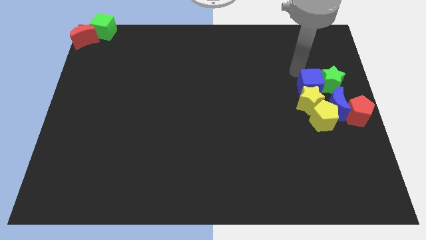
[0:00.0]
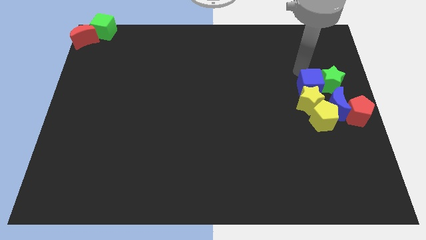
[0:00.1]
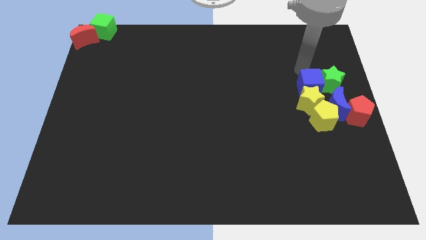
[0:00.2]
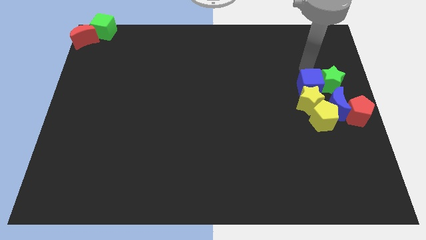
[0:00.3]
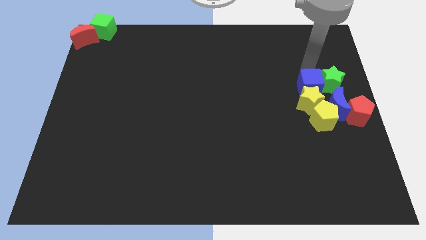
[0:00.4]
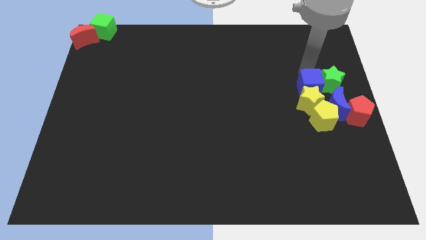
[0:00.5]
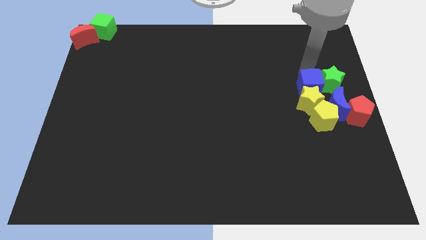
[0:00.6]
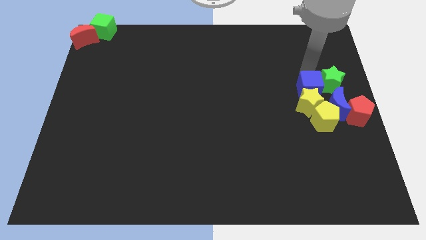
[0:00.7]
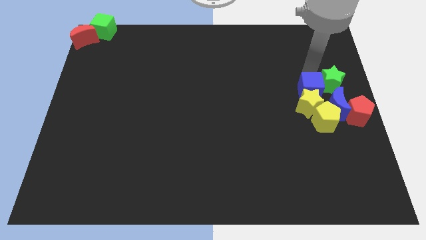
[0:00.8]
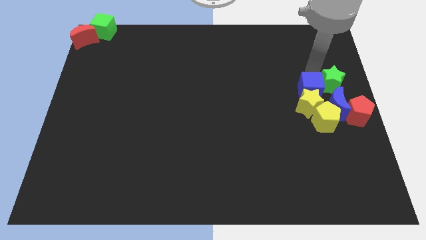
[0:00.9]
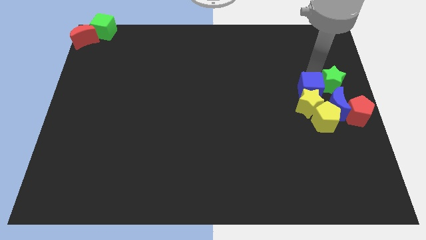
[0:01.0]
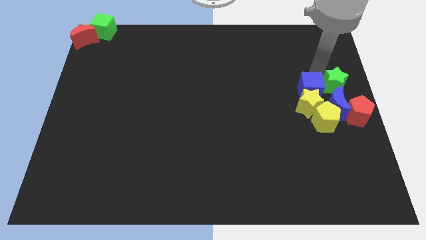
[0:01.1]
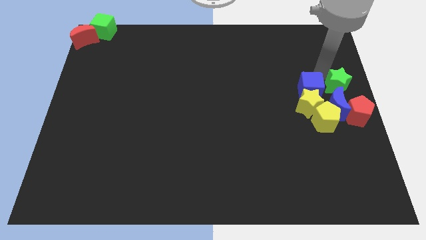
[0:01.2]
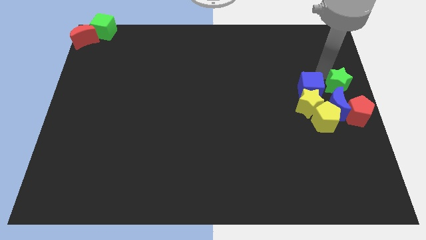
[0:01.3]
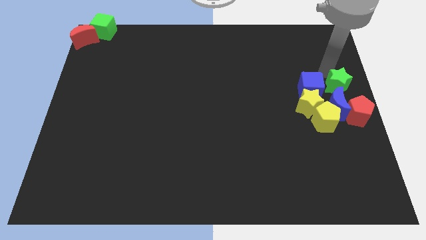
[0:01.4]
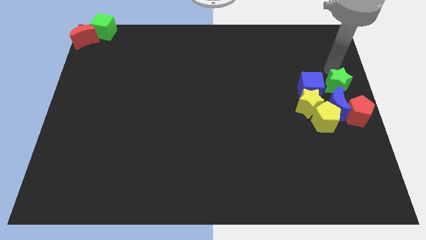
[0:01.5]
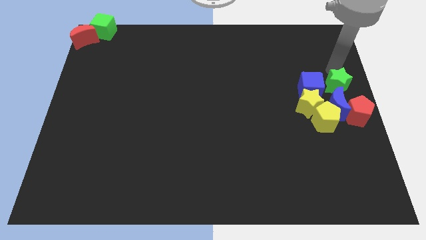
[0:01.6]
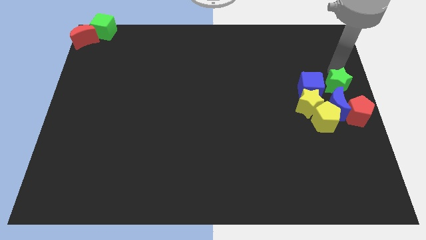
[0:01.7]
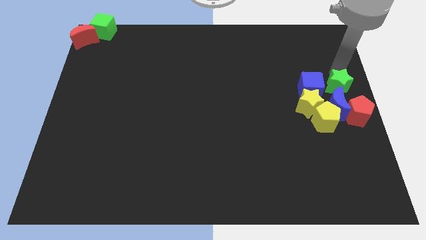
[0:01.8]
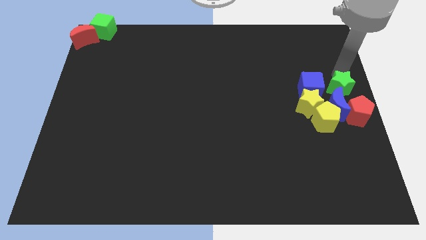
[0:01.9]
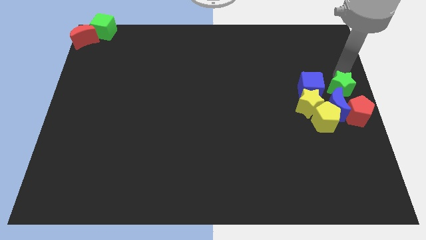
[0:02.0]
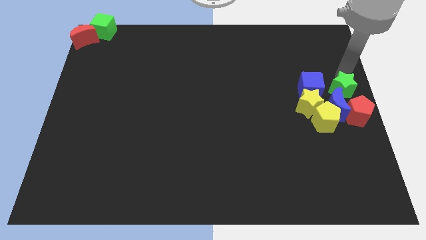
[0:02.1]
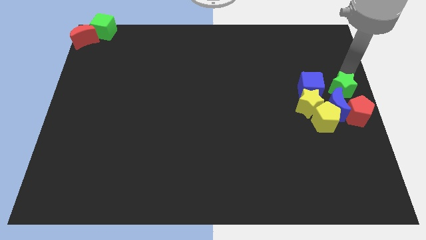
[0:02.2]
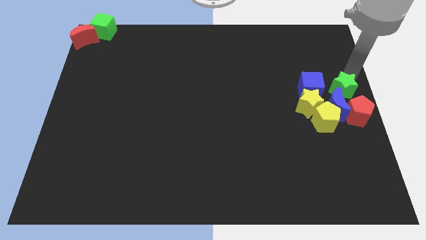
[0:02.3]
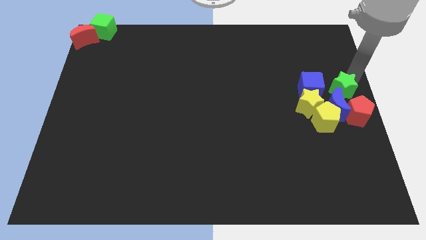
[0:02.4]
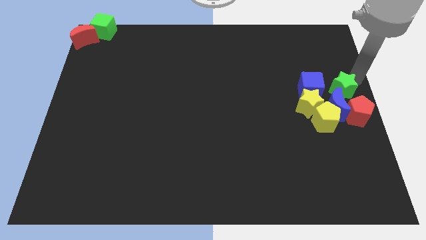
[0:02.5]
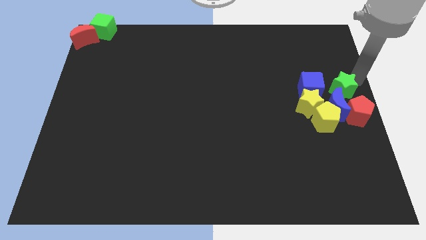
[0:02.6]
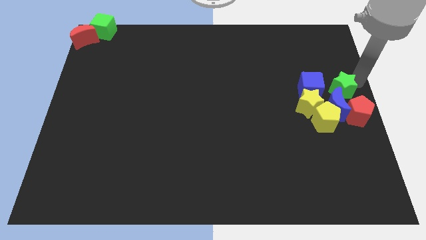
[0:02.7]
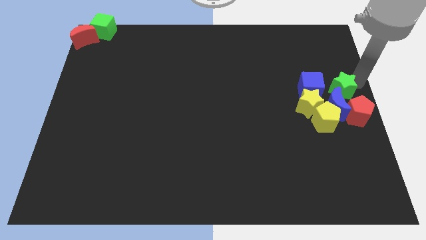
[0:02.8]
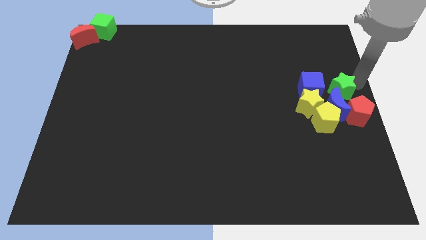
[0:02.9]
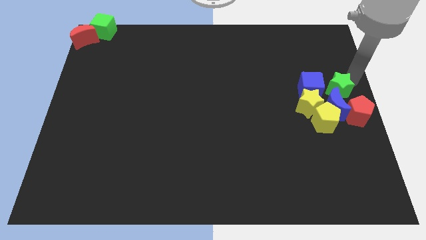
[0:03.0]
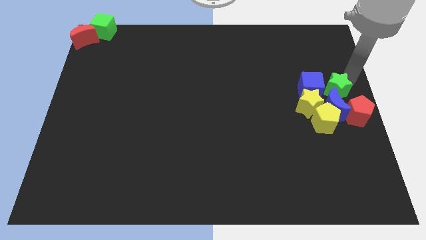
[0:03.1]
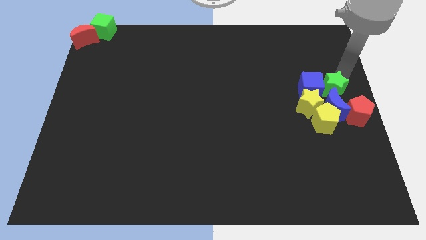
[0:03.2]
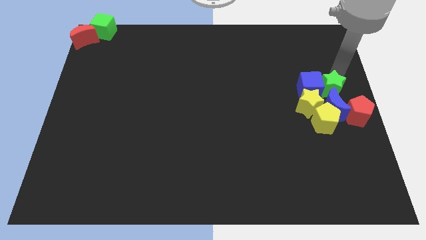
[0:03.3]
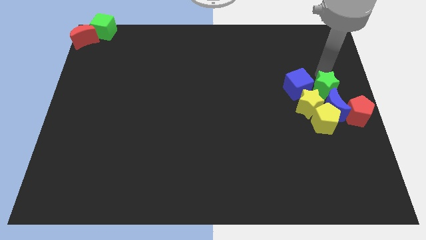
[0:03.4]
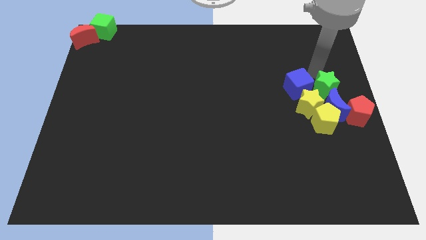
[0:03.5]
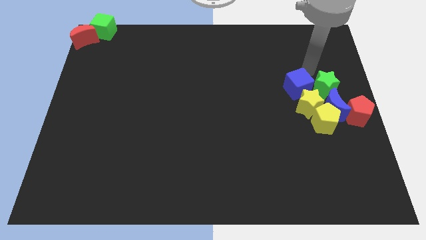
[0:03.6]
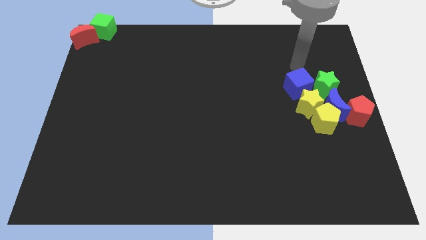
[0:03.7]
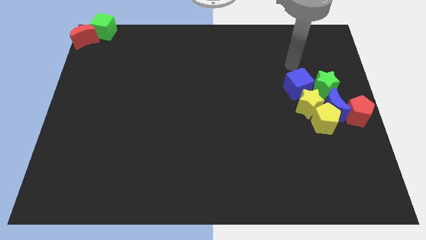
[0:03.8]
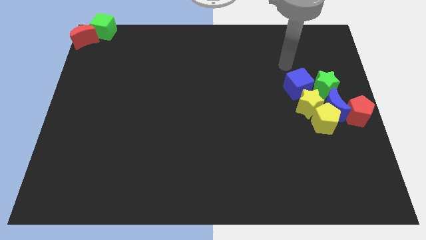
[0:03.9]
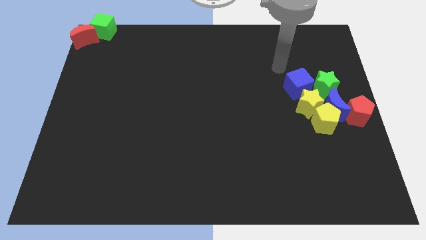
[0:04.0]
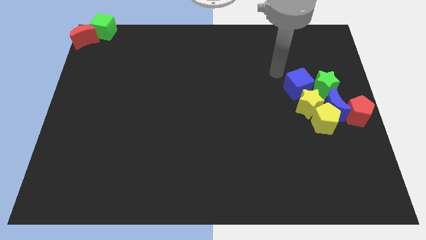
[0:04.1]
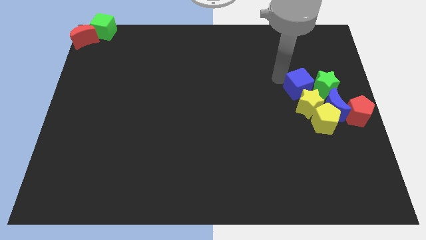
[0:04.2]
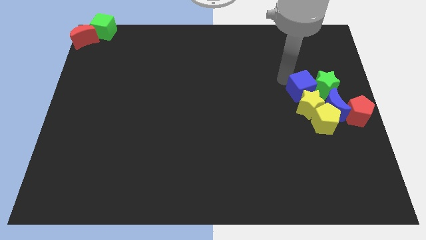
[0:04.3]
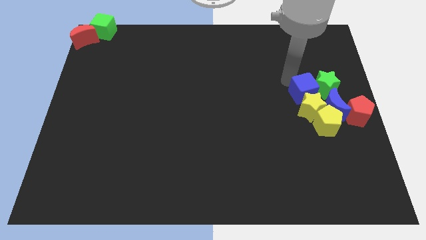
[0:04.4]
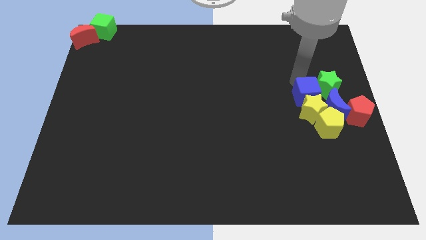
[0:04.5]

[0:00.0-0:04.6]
adjust the group of blocks at the right center of the board

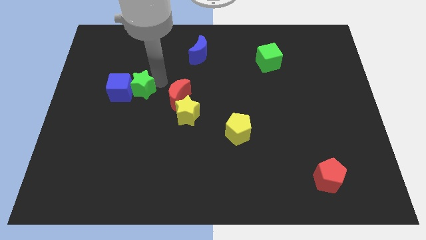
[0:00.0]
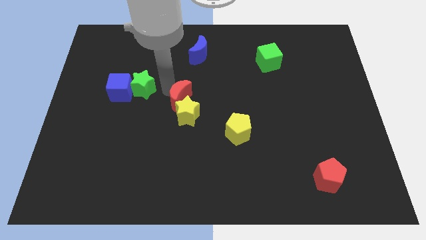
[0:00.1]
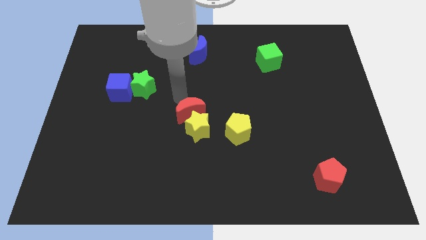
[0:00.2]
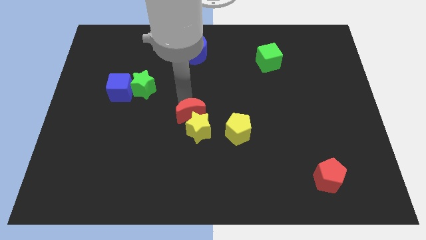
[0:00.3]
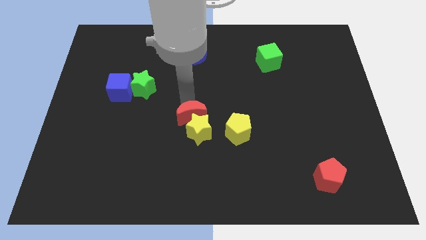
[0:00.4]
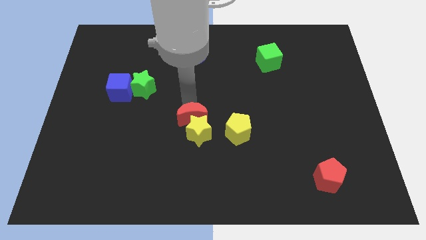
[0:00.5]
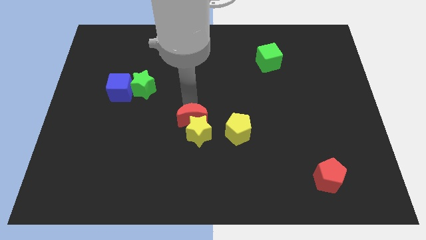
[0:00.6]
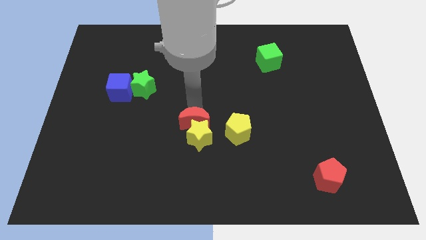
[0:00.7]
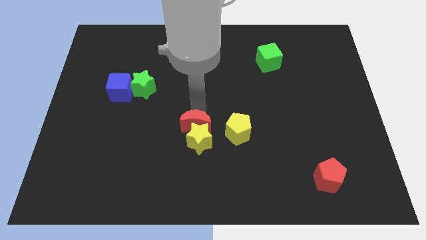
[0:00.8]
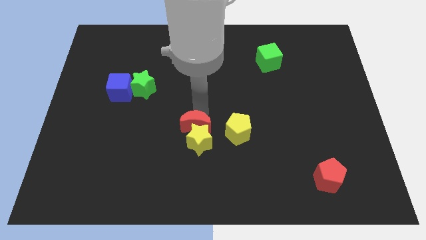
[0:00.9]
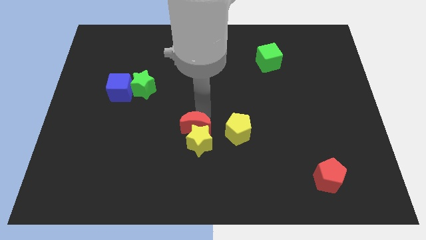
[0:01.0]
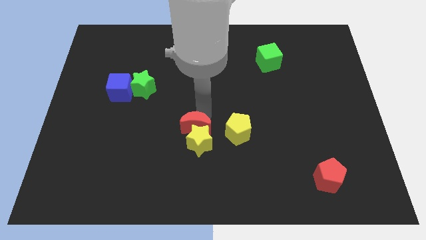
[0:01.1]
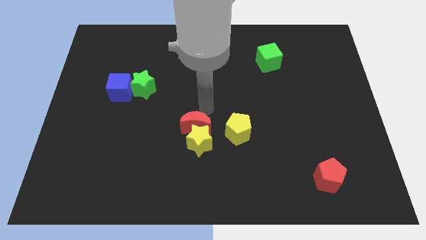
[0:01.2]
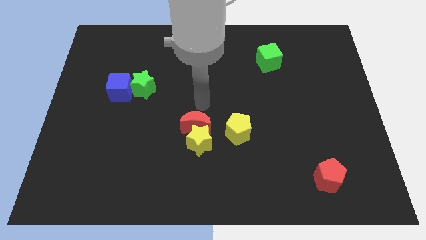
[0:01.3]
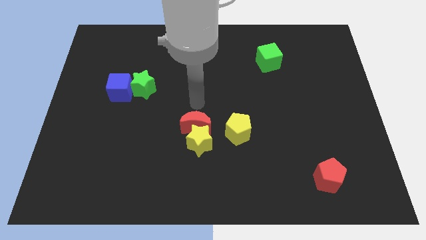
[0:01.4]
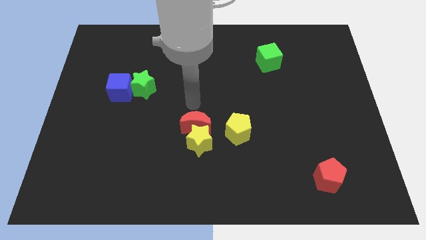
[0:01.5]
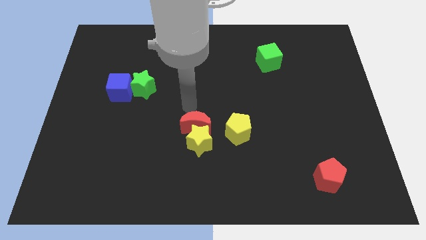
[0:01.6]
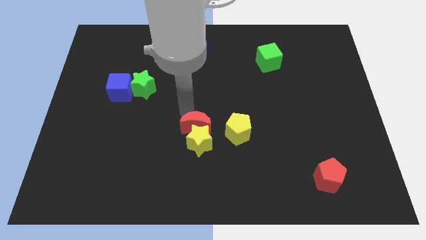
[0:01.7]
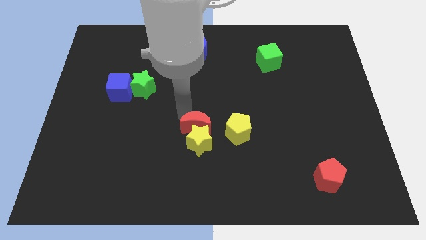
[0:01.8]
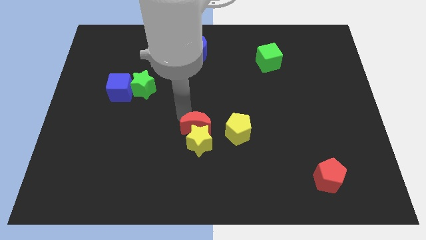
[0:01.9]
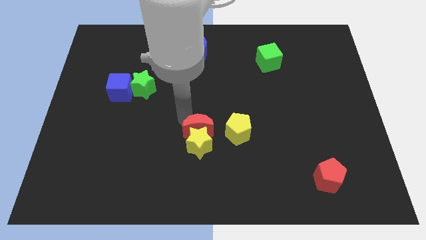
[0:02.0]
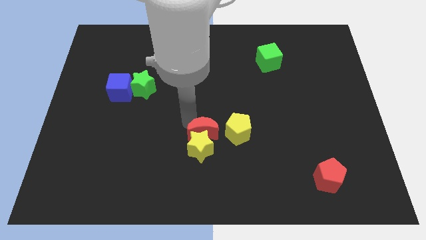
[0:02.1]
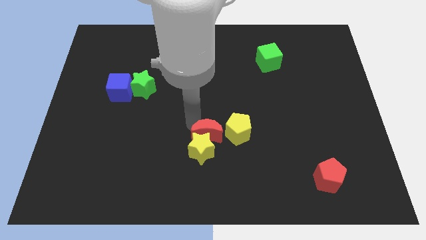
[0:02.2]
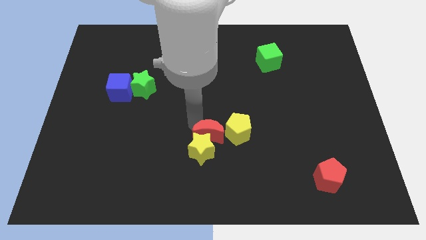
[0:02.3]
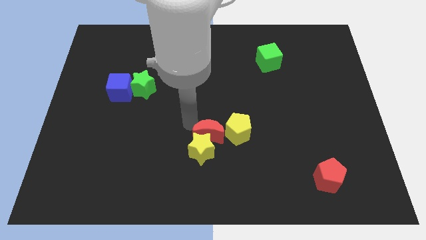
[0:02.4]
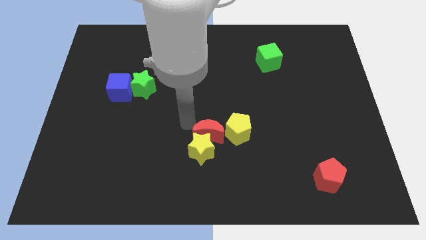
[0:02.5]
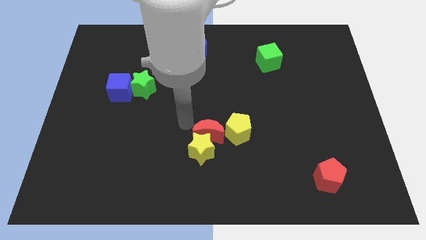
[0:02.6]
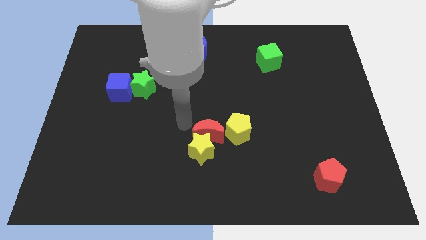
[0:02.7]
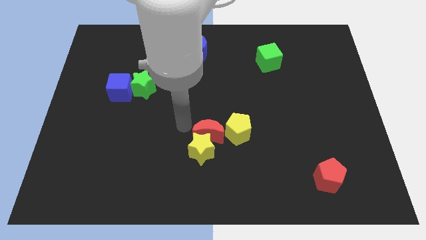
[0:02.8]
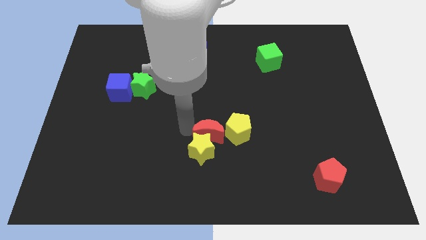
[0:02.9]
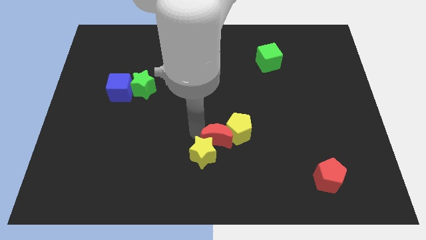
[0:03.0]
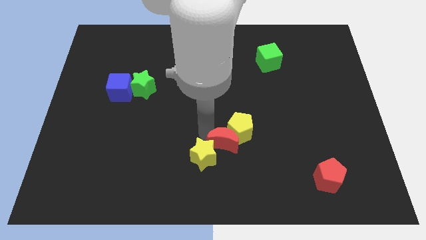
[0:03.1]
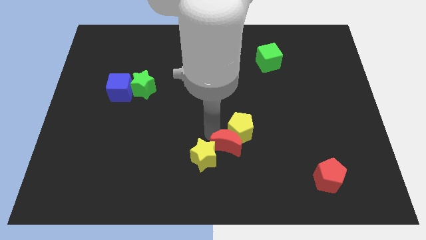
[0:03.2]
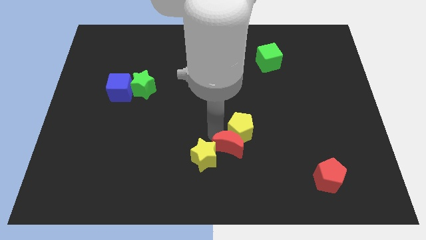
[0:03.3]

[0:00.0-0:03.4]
push red crescent and yellow star towards the yellow pentagon

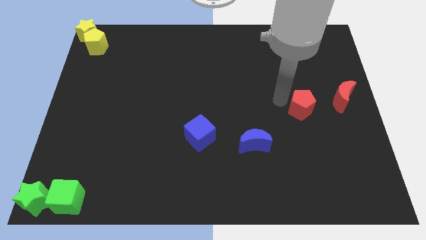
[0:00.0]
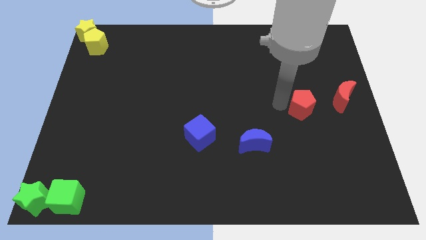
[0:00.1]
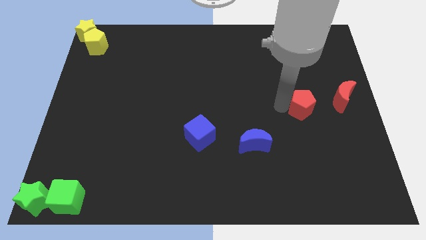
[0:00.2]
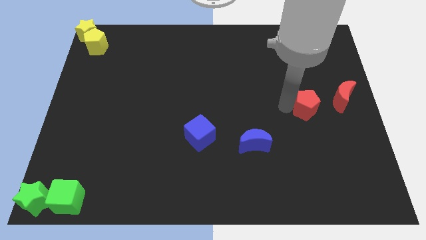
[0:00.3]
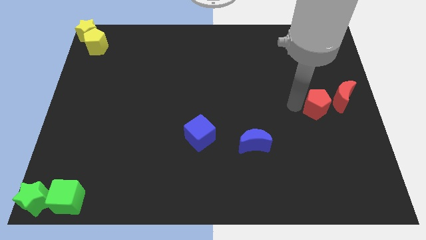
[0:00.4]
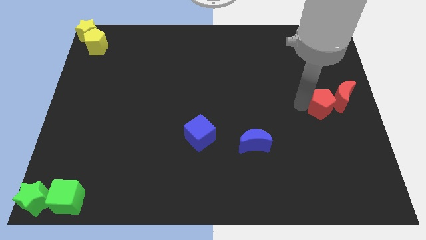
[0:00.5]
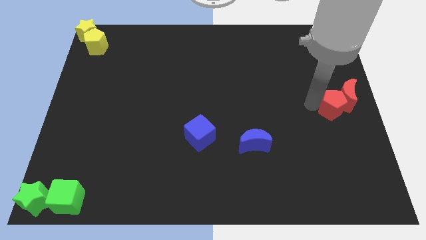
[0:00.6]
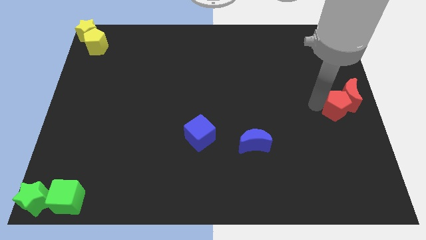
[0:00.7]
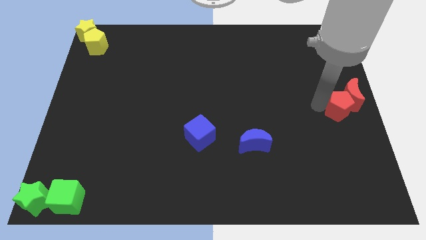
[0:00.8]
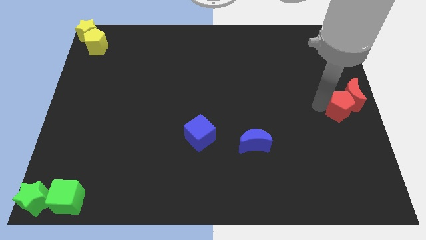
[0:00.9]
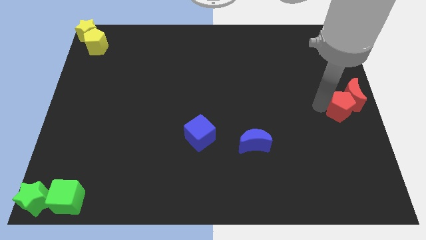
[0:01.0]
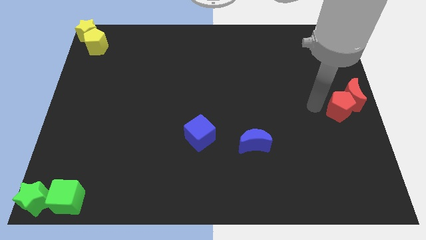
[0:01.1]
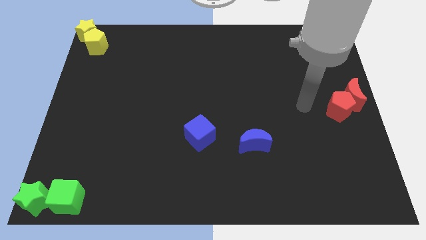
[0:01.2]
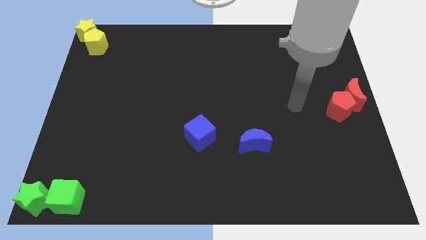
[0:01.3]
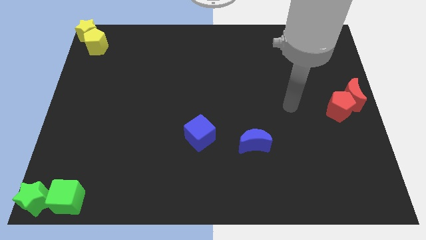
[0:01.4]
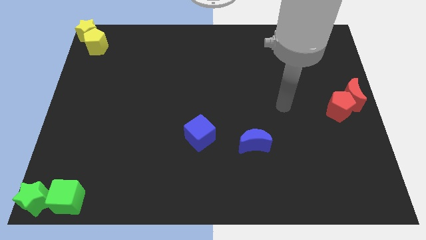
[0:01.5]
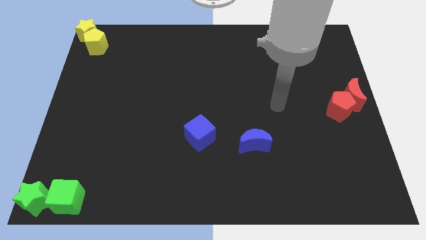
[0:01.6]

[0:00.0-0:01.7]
push the red moon and pentagon towards the right center of the board
